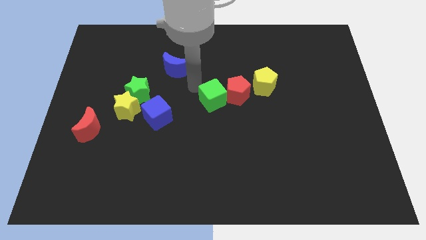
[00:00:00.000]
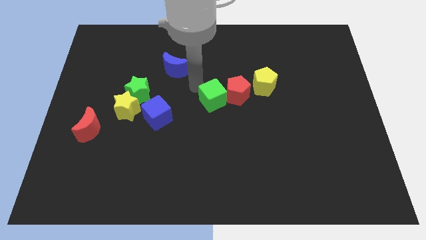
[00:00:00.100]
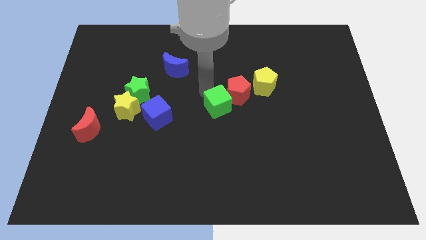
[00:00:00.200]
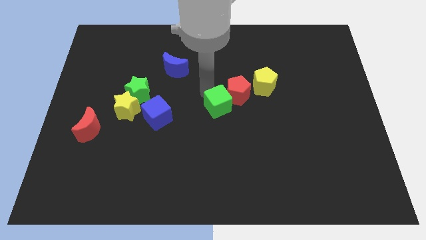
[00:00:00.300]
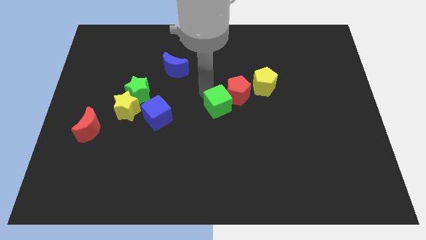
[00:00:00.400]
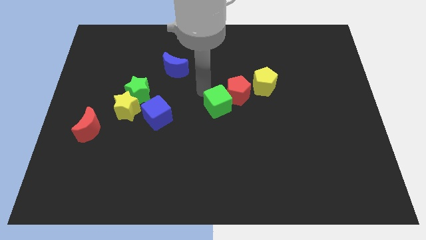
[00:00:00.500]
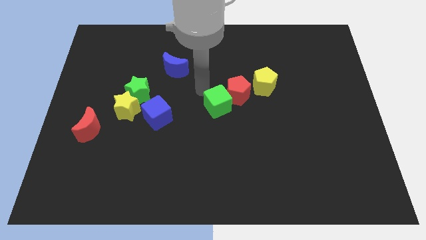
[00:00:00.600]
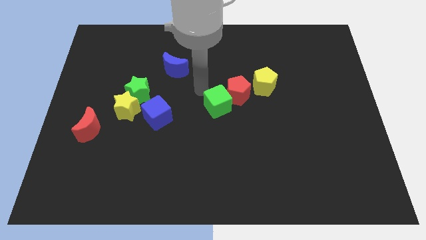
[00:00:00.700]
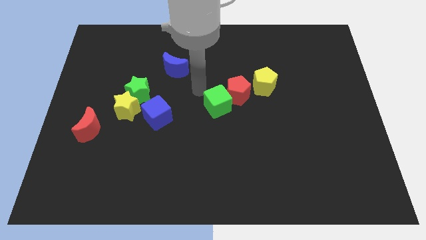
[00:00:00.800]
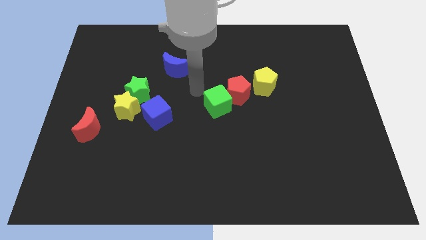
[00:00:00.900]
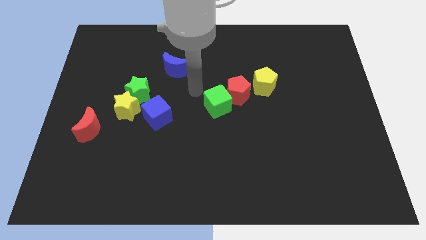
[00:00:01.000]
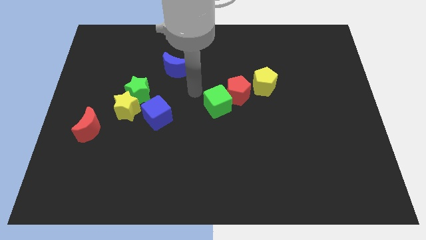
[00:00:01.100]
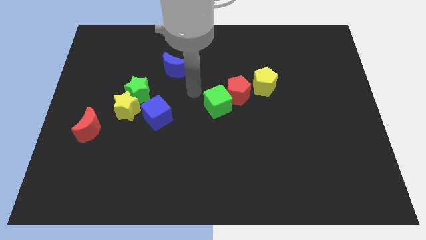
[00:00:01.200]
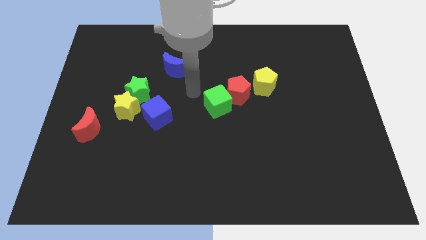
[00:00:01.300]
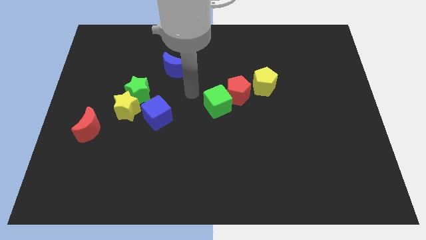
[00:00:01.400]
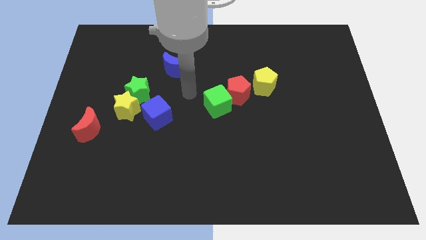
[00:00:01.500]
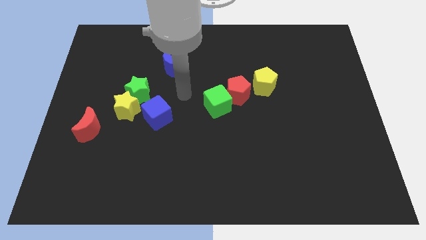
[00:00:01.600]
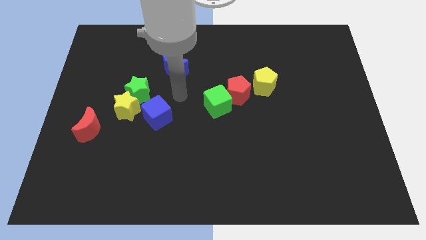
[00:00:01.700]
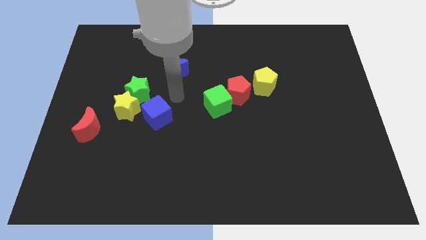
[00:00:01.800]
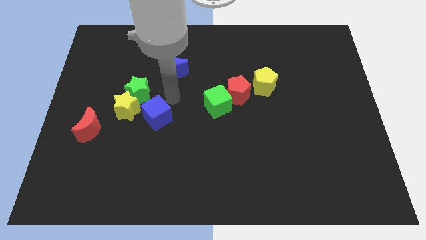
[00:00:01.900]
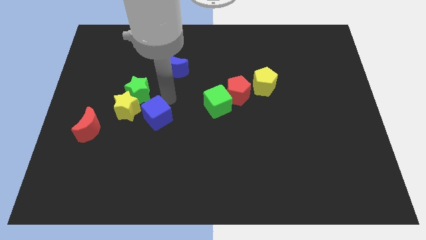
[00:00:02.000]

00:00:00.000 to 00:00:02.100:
slightly move the green cube beside the red pentagon

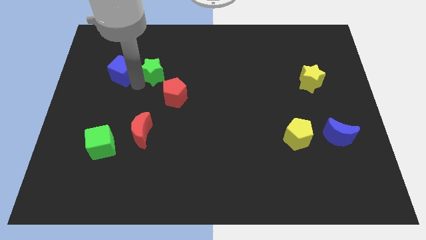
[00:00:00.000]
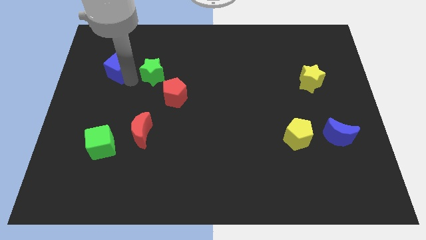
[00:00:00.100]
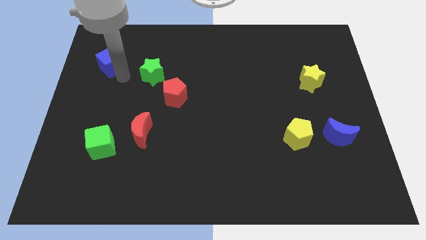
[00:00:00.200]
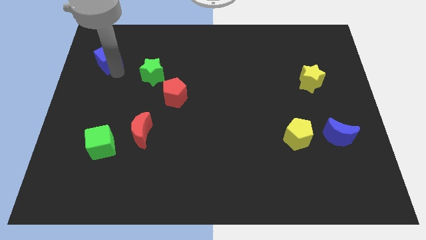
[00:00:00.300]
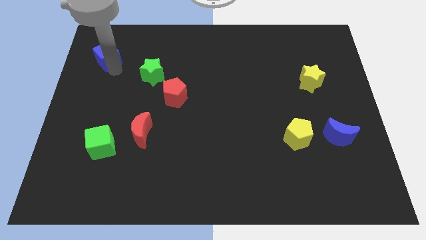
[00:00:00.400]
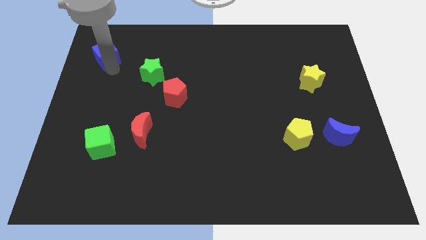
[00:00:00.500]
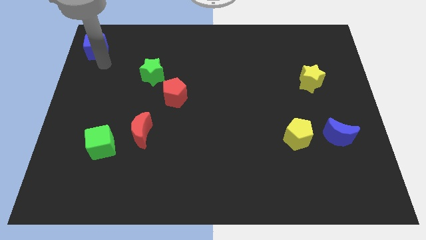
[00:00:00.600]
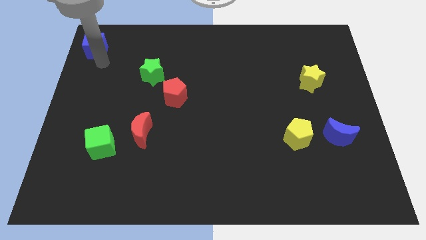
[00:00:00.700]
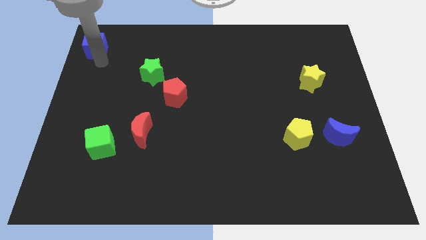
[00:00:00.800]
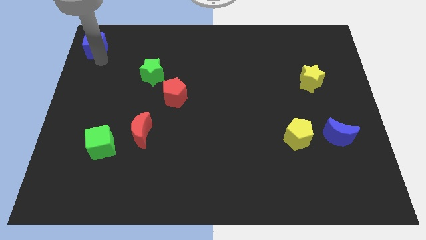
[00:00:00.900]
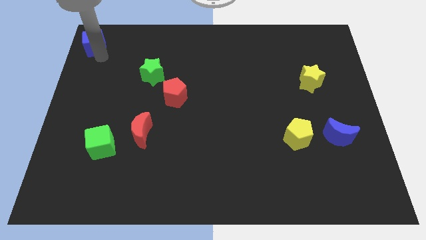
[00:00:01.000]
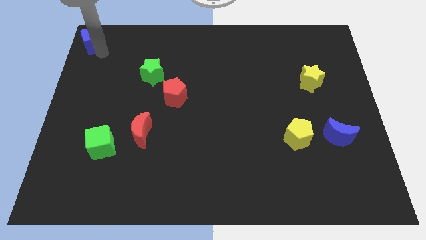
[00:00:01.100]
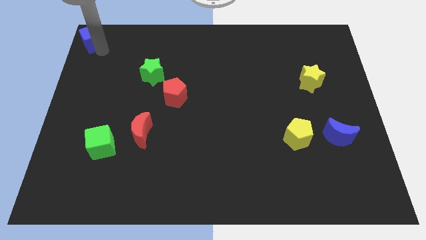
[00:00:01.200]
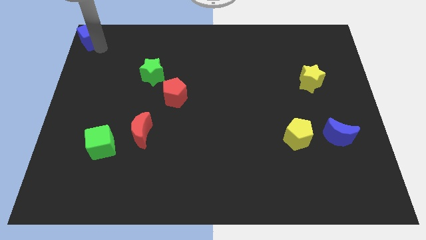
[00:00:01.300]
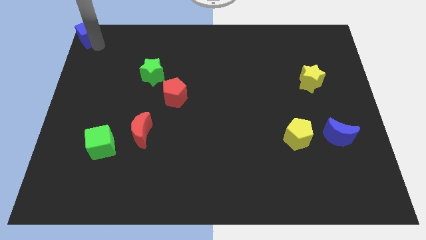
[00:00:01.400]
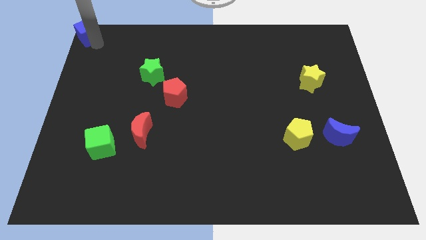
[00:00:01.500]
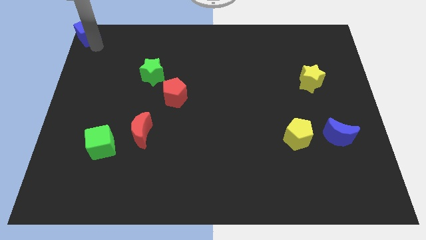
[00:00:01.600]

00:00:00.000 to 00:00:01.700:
slide the blue cube to the top left corner of the board

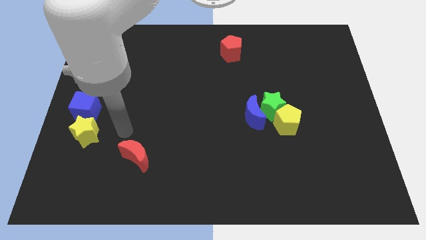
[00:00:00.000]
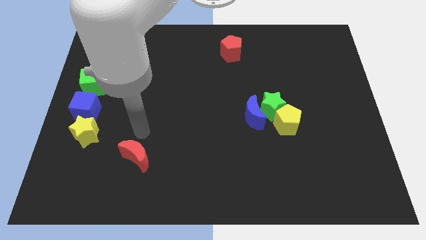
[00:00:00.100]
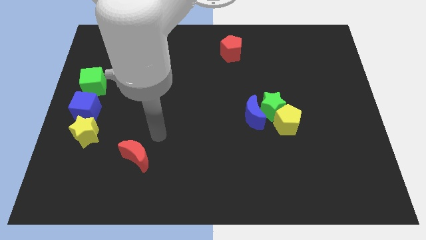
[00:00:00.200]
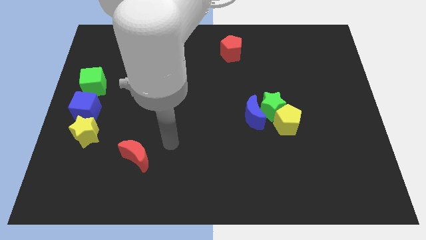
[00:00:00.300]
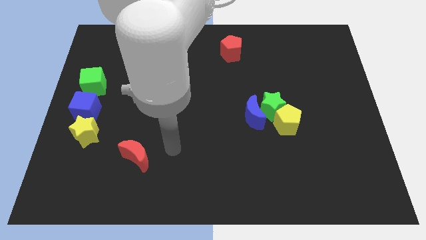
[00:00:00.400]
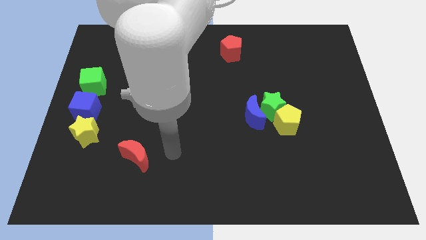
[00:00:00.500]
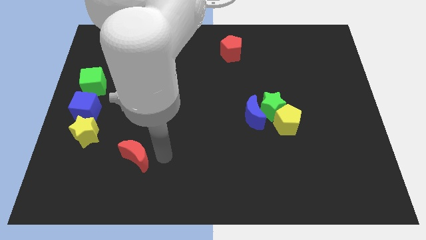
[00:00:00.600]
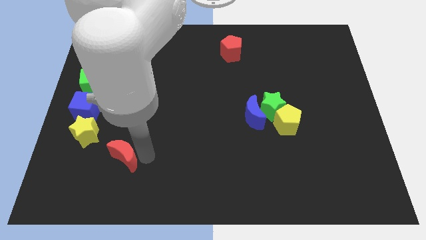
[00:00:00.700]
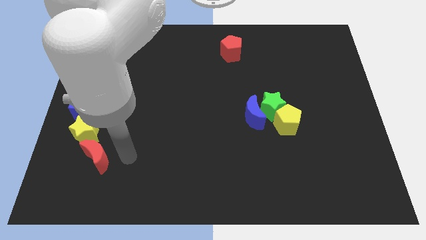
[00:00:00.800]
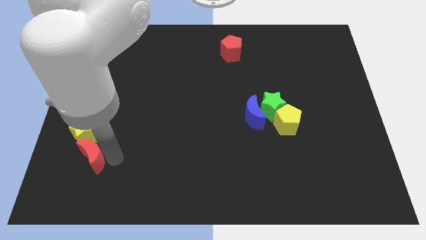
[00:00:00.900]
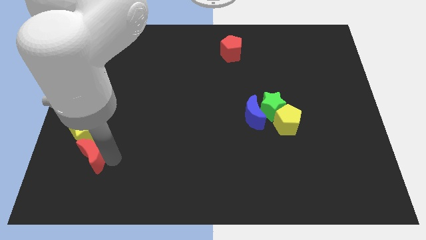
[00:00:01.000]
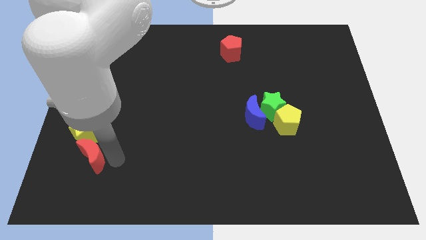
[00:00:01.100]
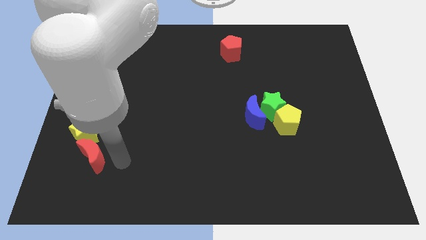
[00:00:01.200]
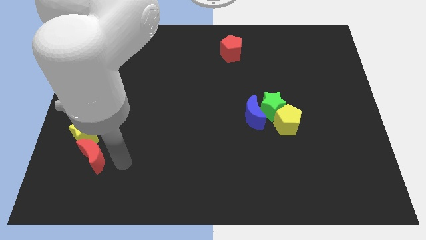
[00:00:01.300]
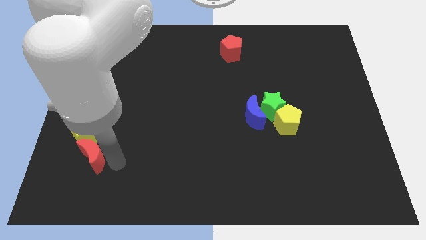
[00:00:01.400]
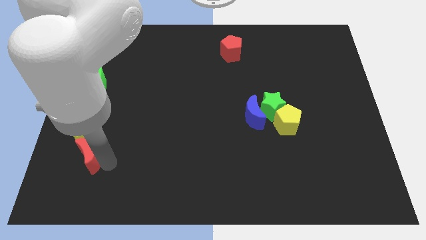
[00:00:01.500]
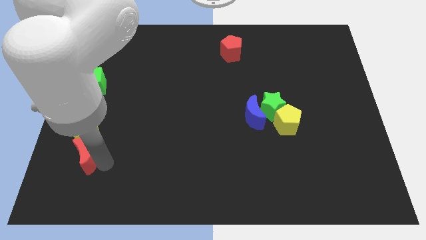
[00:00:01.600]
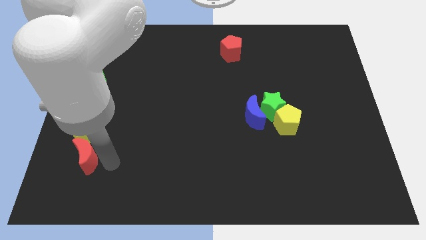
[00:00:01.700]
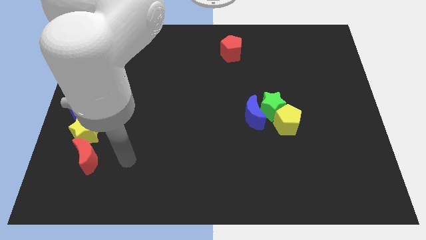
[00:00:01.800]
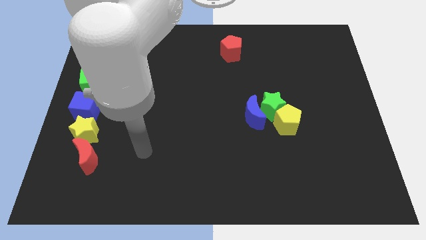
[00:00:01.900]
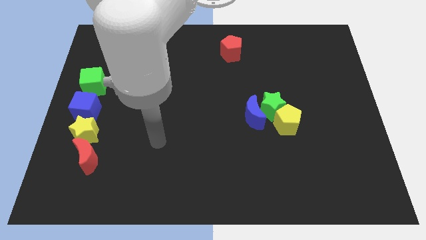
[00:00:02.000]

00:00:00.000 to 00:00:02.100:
place the red moon vertical to the bottom of the yellow star

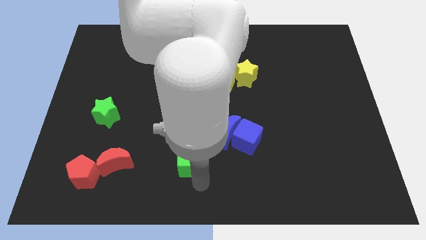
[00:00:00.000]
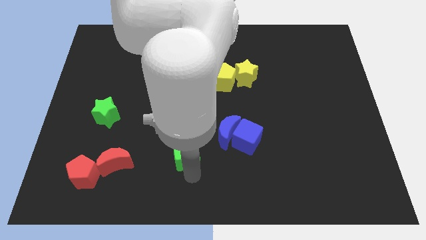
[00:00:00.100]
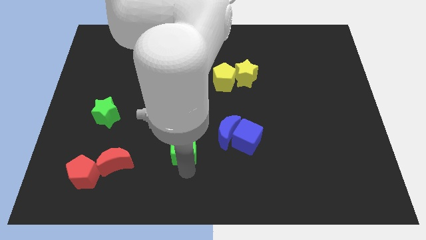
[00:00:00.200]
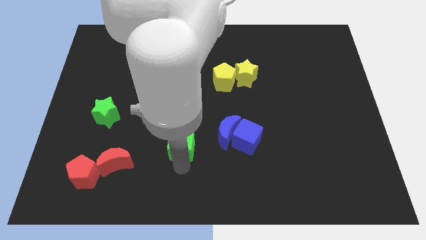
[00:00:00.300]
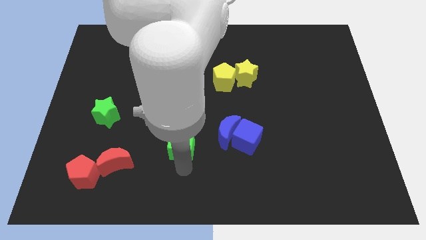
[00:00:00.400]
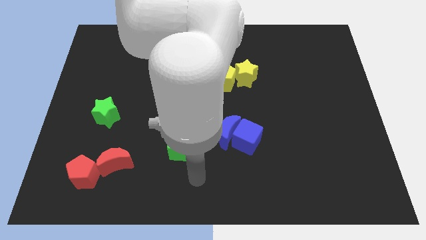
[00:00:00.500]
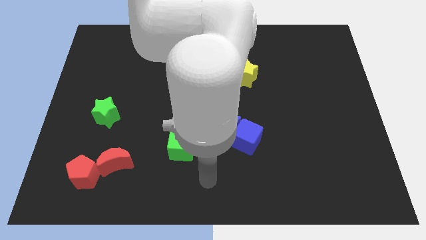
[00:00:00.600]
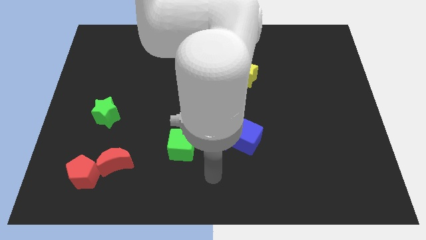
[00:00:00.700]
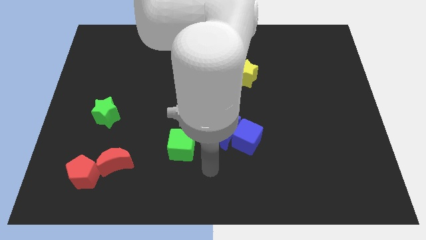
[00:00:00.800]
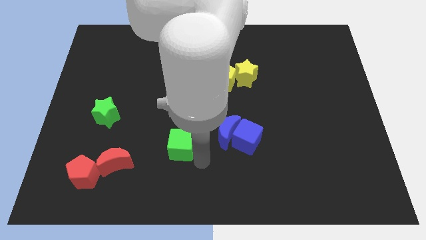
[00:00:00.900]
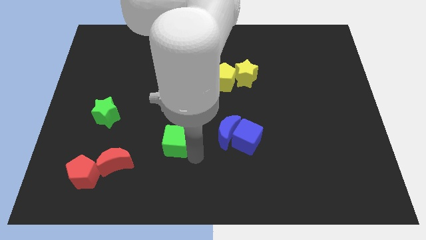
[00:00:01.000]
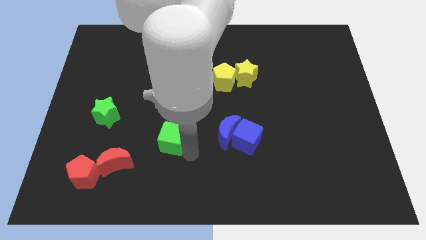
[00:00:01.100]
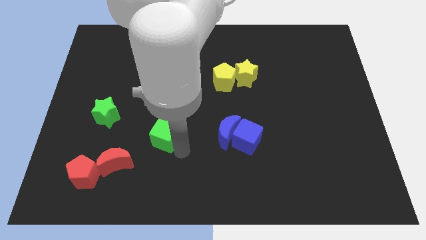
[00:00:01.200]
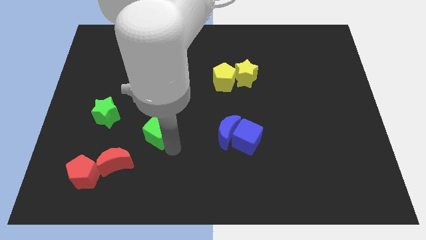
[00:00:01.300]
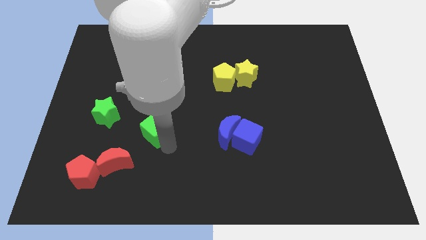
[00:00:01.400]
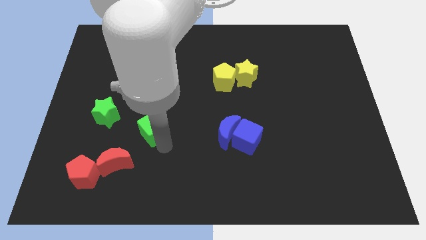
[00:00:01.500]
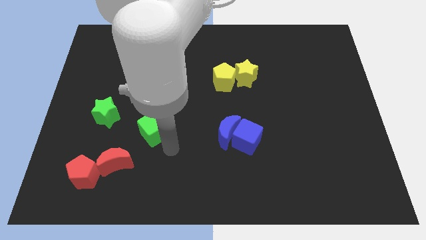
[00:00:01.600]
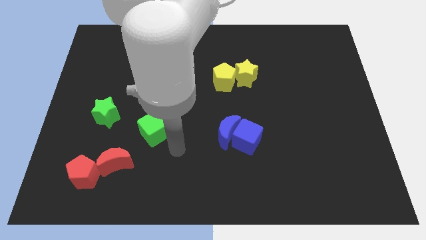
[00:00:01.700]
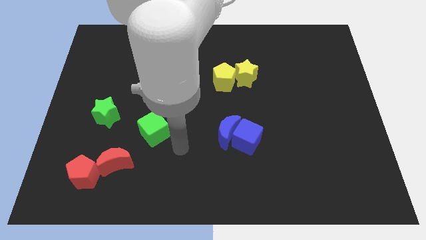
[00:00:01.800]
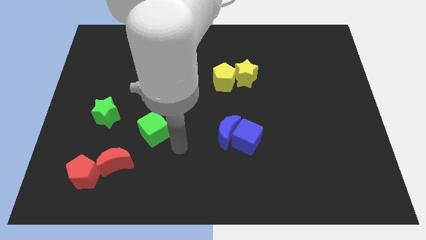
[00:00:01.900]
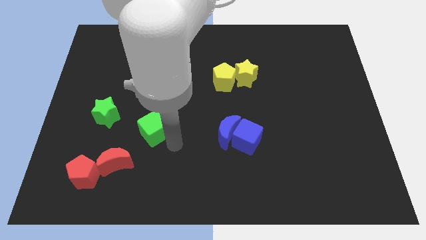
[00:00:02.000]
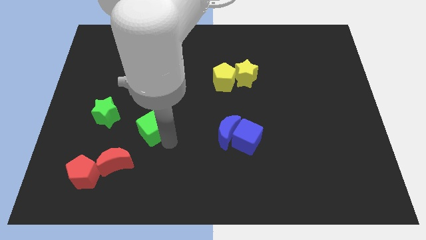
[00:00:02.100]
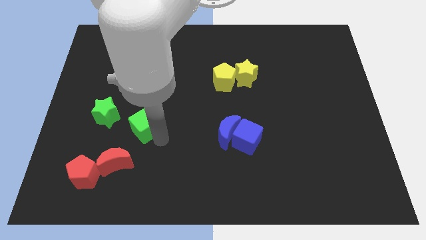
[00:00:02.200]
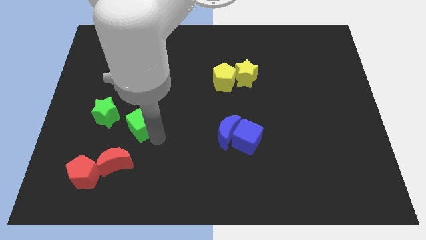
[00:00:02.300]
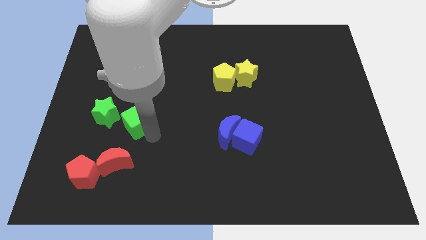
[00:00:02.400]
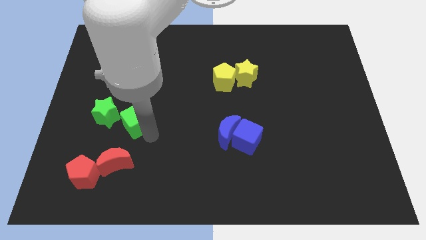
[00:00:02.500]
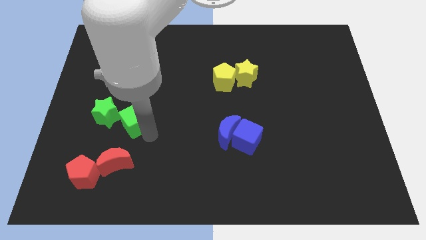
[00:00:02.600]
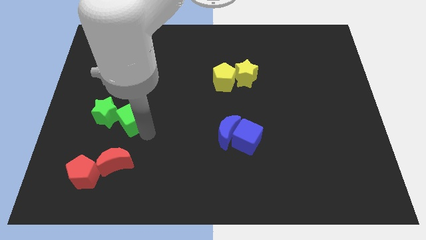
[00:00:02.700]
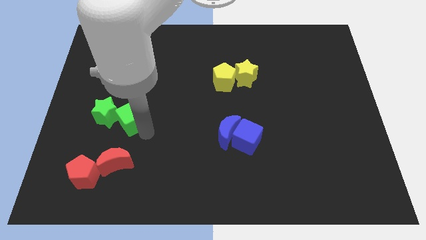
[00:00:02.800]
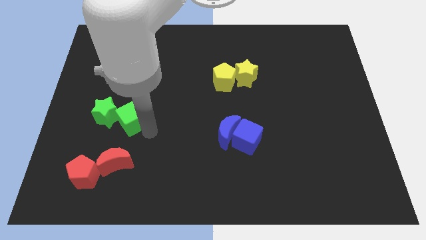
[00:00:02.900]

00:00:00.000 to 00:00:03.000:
place the green cube right to the green star
